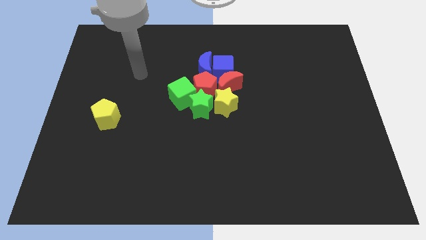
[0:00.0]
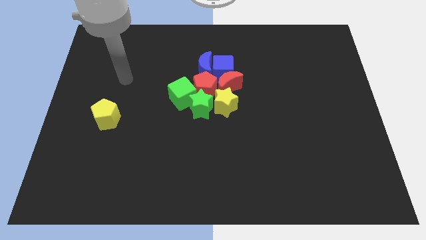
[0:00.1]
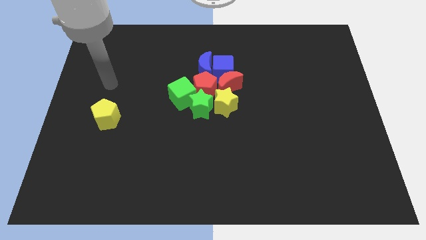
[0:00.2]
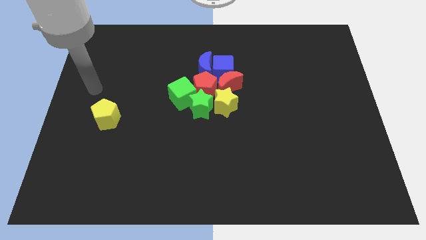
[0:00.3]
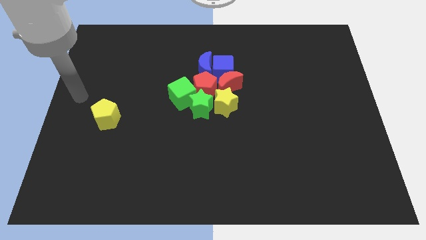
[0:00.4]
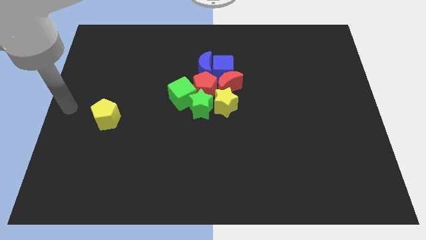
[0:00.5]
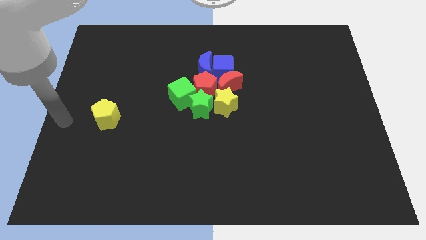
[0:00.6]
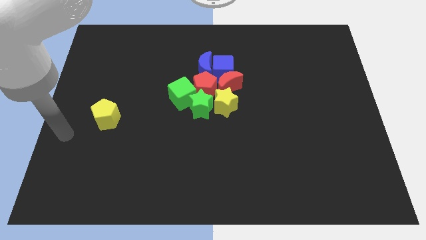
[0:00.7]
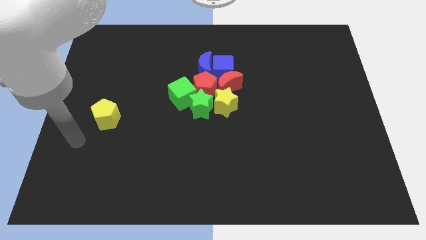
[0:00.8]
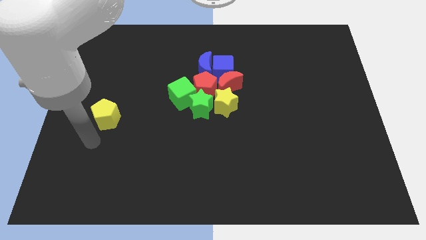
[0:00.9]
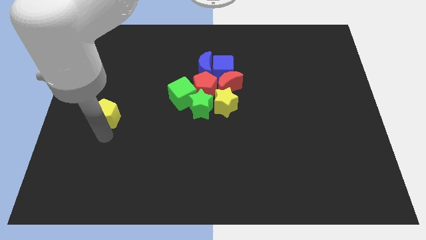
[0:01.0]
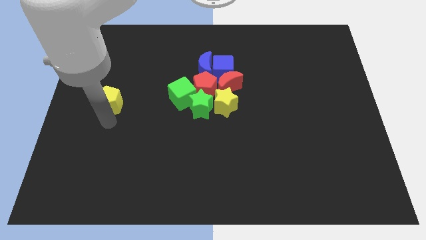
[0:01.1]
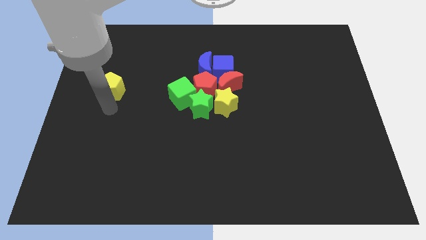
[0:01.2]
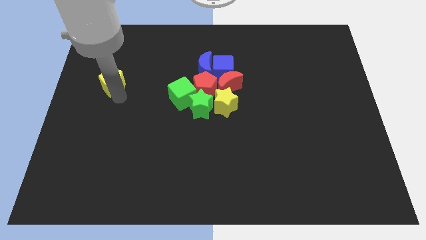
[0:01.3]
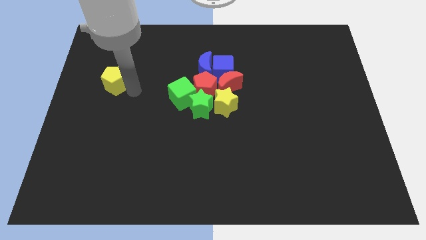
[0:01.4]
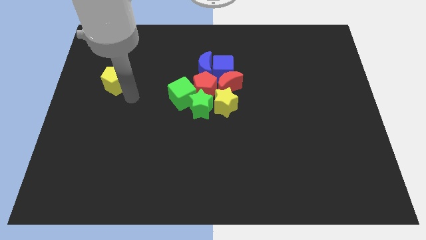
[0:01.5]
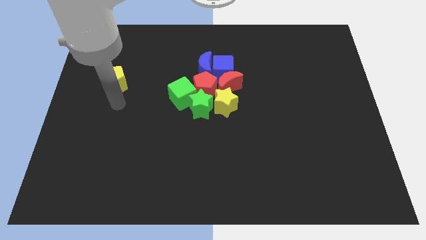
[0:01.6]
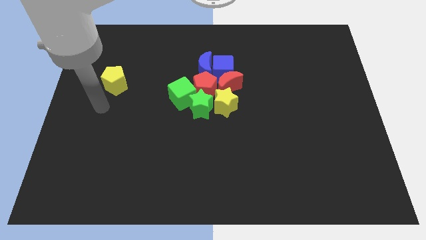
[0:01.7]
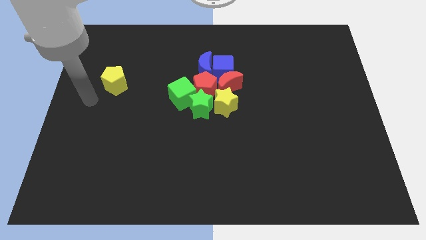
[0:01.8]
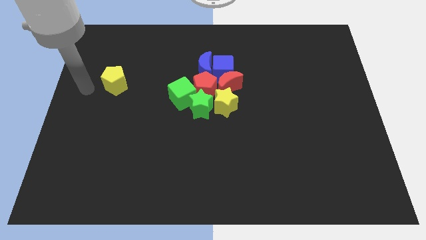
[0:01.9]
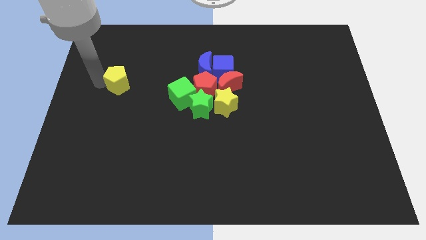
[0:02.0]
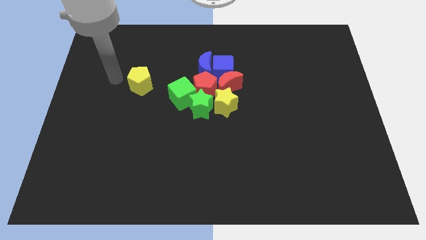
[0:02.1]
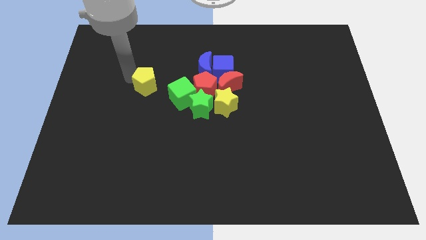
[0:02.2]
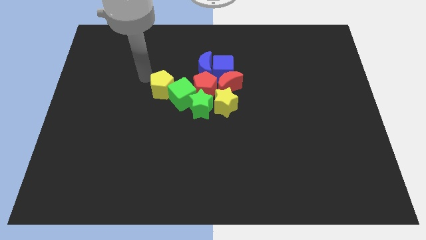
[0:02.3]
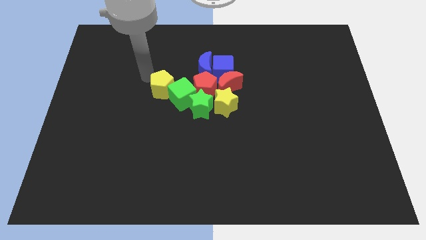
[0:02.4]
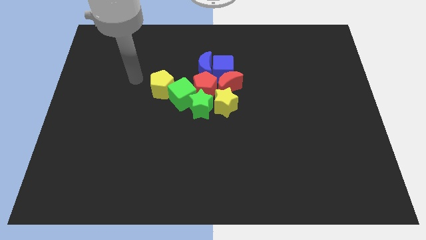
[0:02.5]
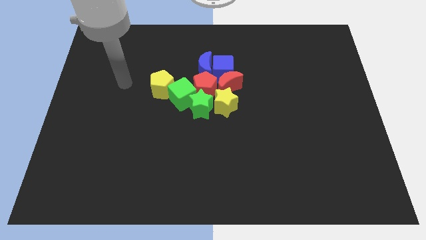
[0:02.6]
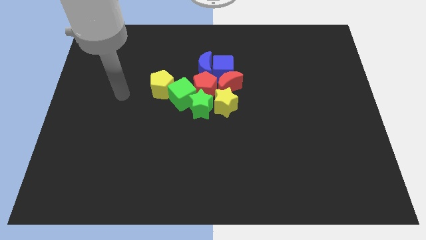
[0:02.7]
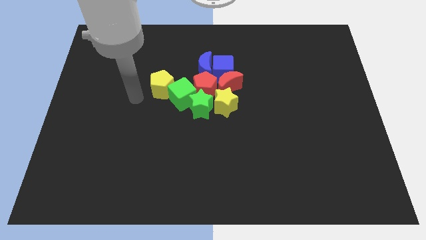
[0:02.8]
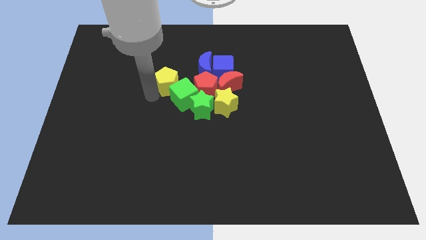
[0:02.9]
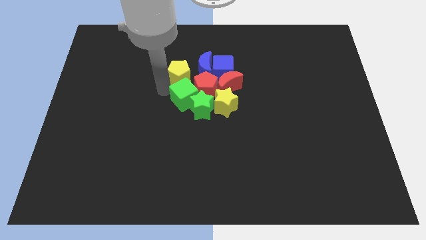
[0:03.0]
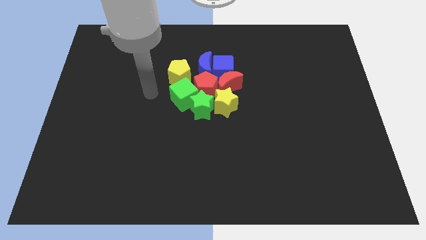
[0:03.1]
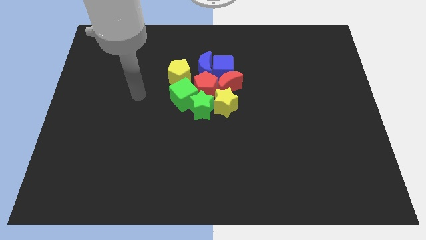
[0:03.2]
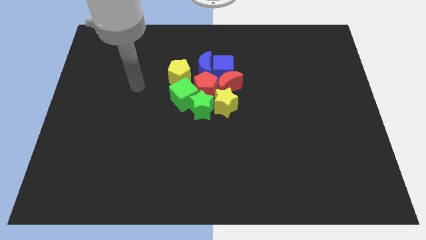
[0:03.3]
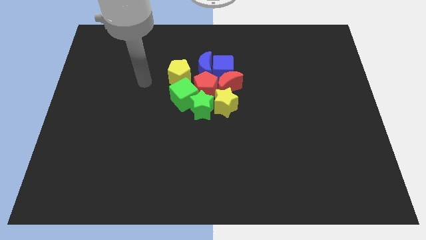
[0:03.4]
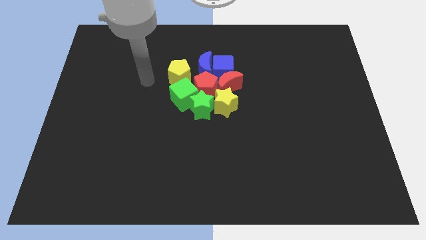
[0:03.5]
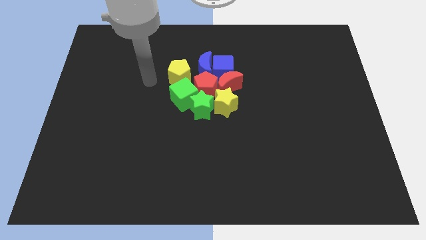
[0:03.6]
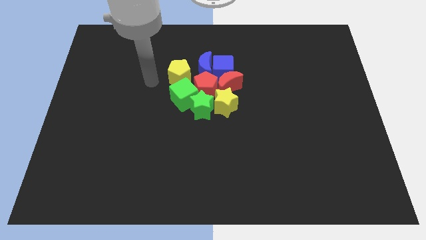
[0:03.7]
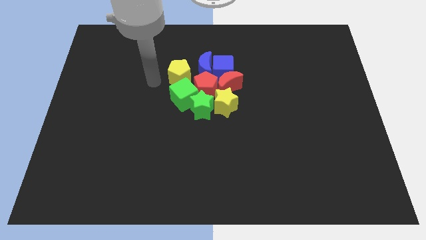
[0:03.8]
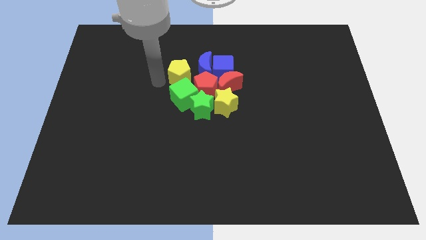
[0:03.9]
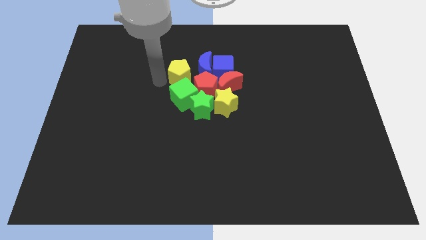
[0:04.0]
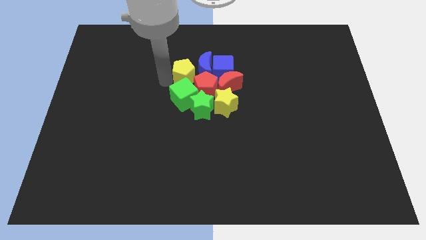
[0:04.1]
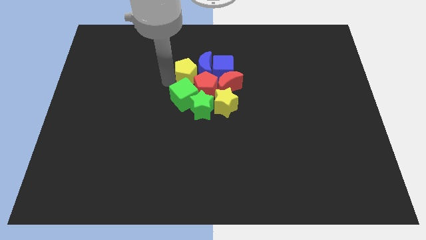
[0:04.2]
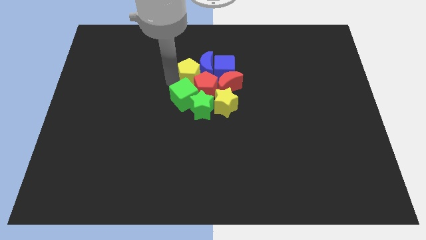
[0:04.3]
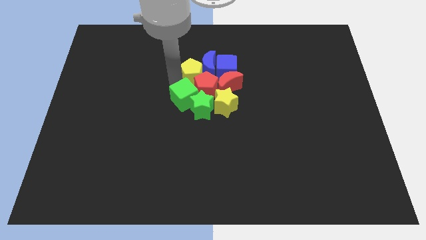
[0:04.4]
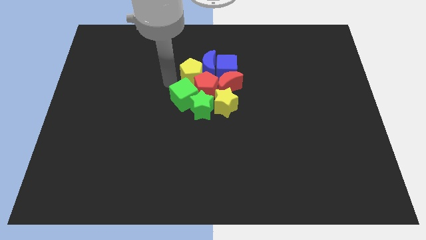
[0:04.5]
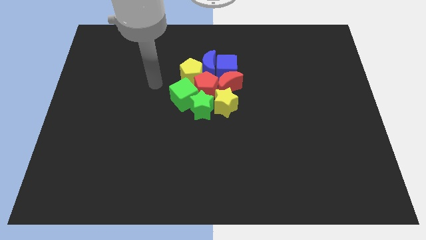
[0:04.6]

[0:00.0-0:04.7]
push the yellow pentagon into the blue moon

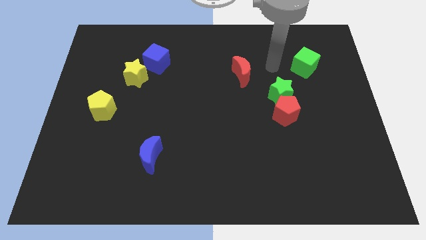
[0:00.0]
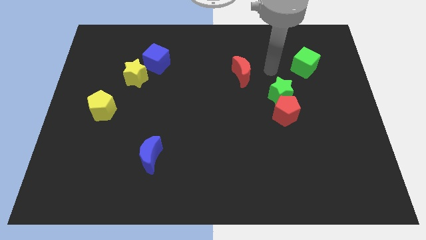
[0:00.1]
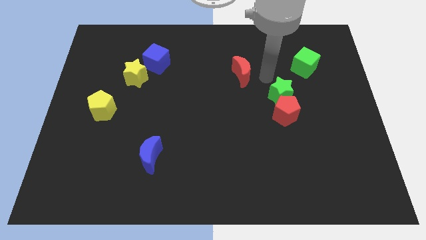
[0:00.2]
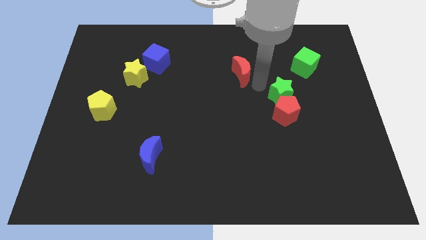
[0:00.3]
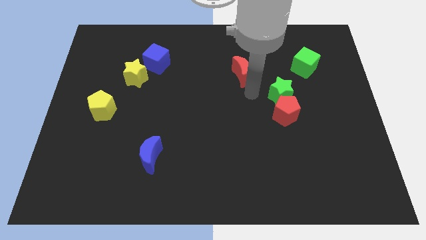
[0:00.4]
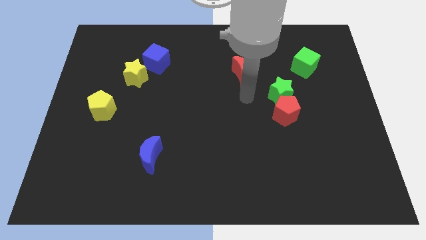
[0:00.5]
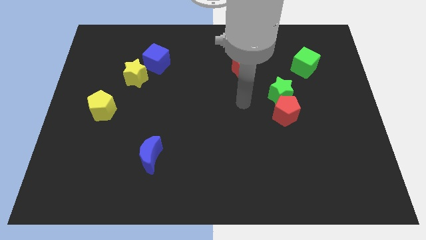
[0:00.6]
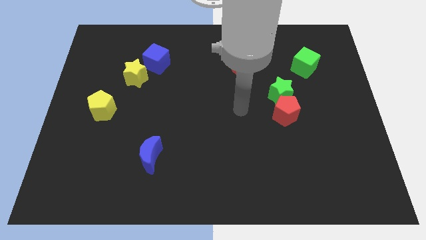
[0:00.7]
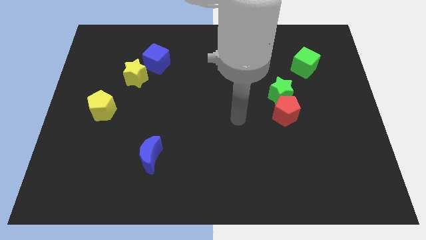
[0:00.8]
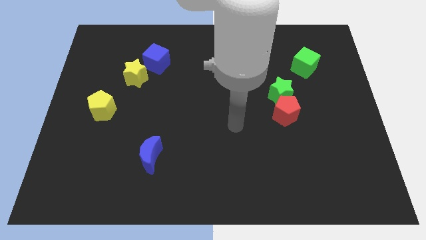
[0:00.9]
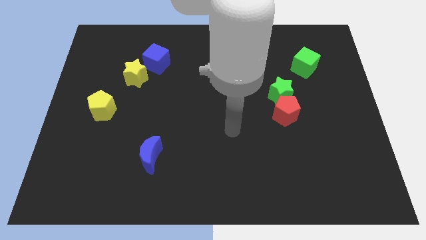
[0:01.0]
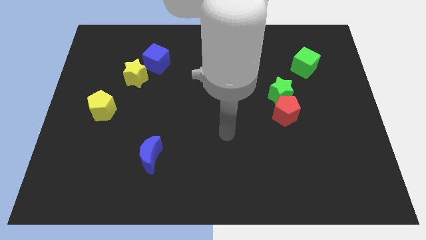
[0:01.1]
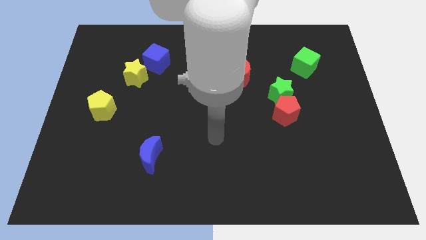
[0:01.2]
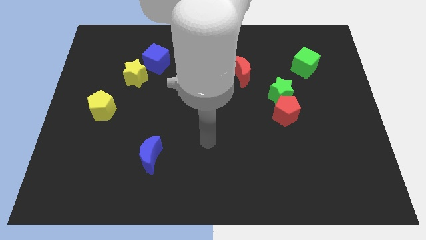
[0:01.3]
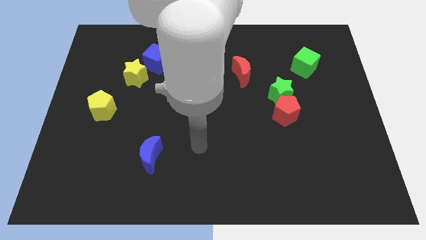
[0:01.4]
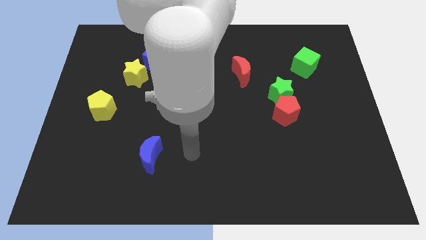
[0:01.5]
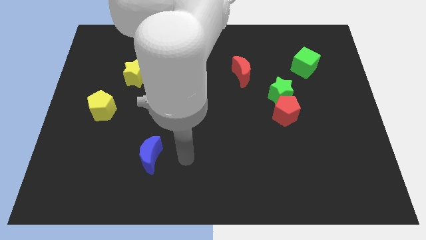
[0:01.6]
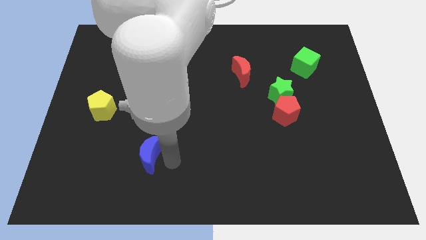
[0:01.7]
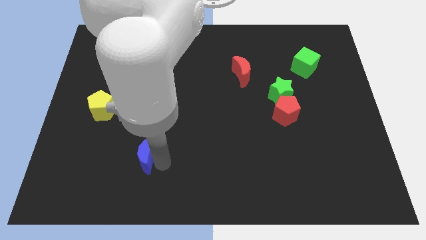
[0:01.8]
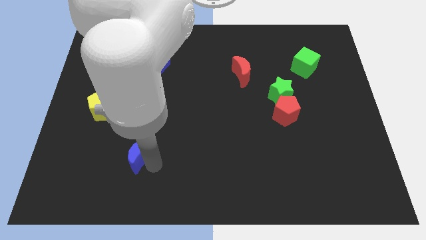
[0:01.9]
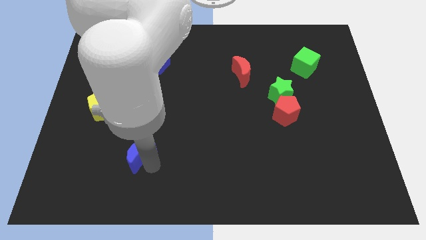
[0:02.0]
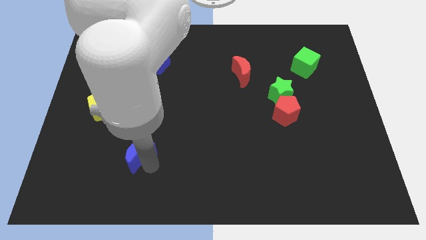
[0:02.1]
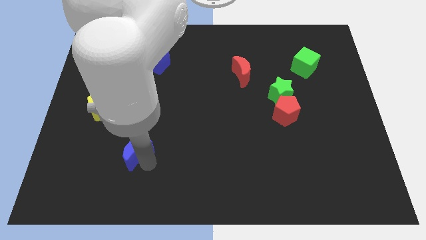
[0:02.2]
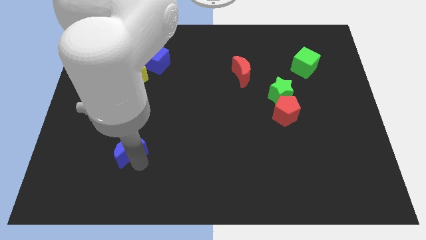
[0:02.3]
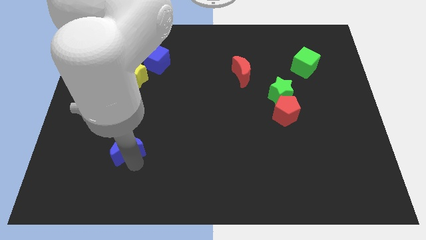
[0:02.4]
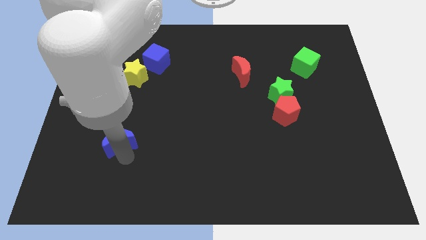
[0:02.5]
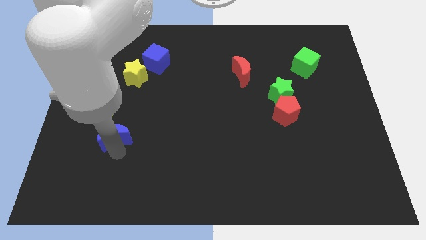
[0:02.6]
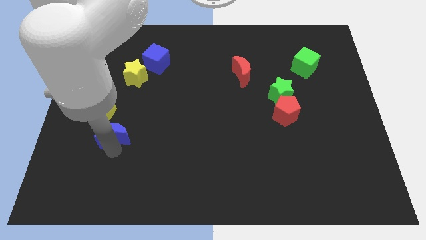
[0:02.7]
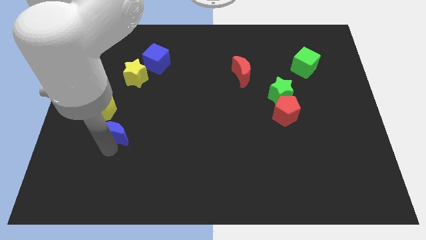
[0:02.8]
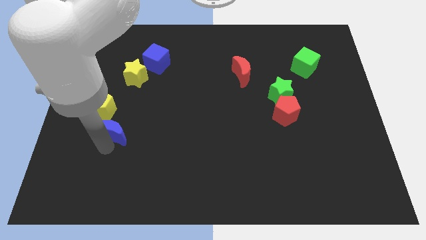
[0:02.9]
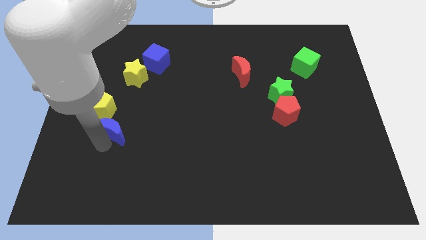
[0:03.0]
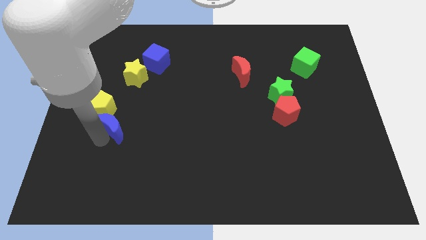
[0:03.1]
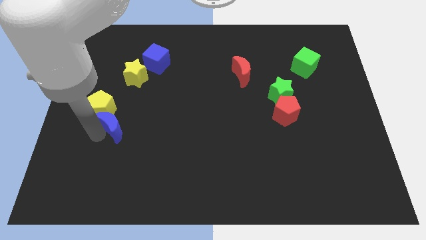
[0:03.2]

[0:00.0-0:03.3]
move the blue moon diagonal below yellow pentagon

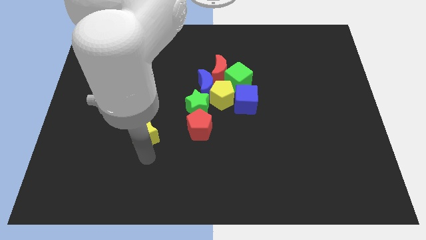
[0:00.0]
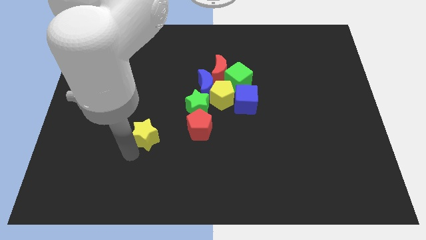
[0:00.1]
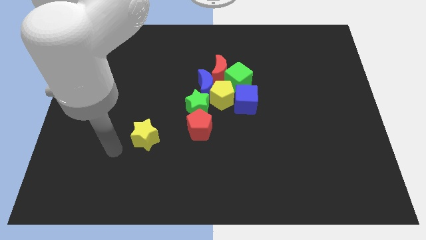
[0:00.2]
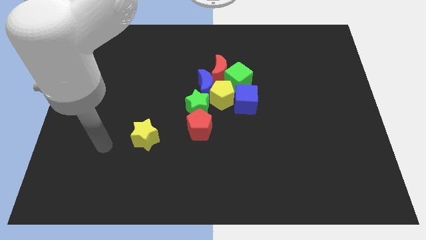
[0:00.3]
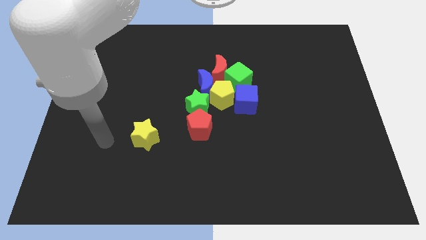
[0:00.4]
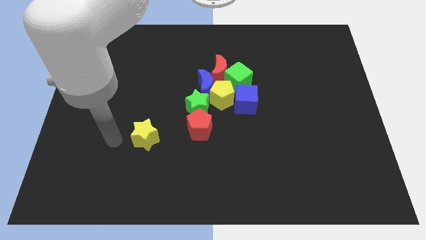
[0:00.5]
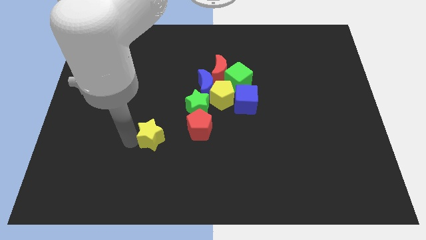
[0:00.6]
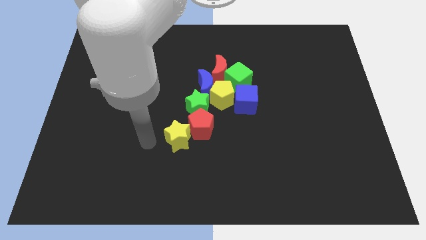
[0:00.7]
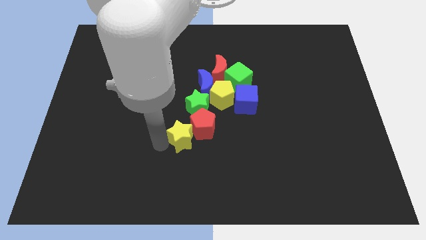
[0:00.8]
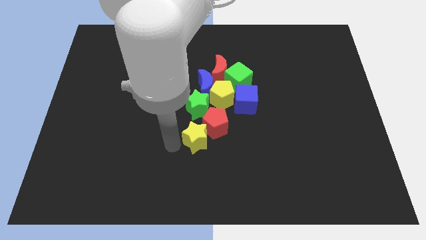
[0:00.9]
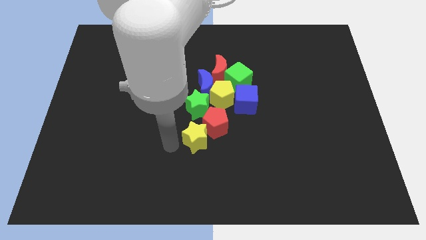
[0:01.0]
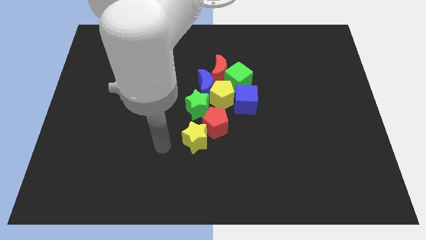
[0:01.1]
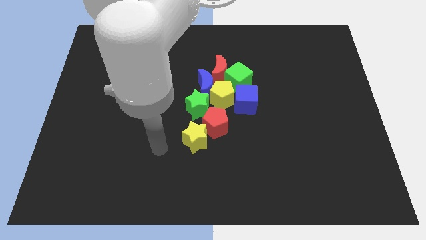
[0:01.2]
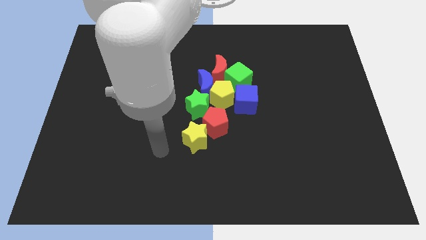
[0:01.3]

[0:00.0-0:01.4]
push the yellow star into red pentagon
